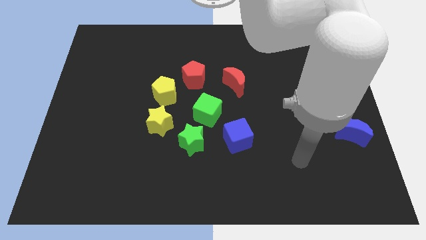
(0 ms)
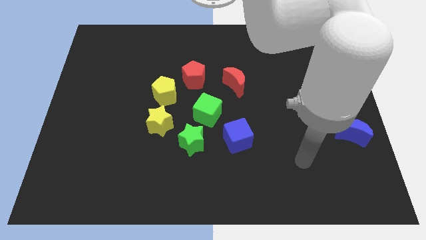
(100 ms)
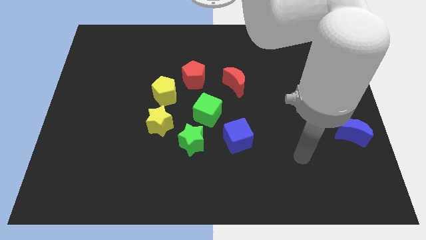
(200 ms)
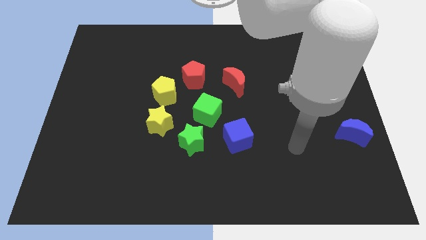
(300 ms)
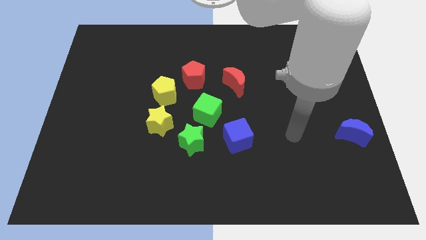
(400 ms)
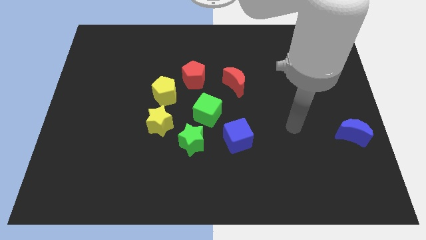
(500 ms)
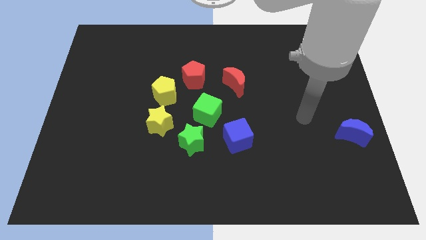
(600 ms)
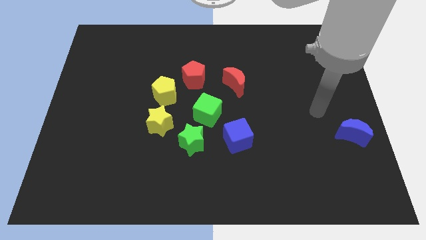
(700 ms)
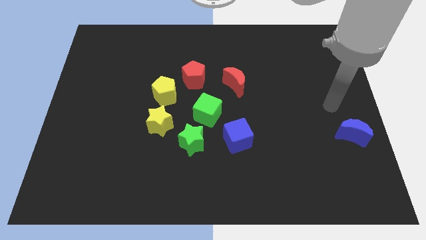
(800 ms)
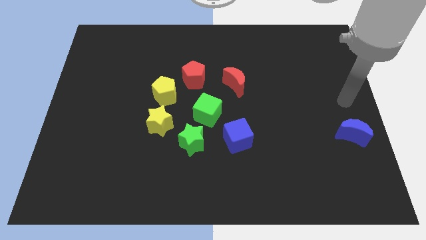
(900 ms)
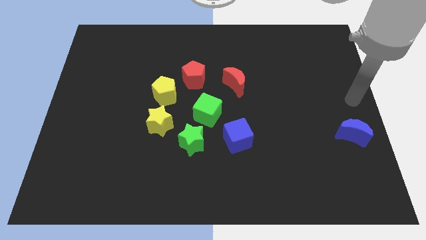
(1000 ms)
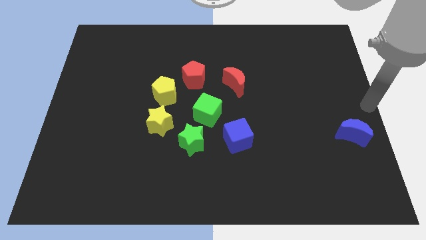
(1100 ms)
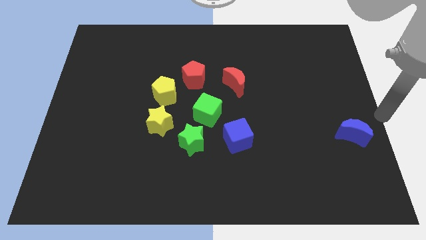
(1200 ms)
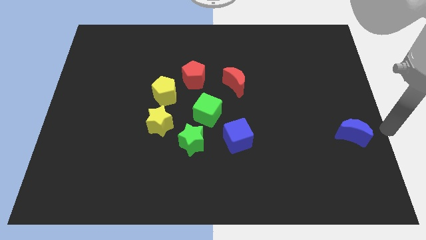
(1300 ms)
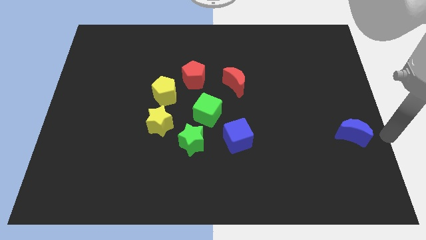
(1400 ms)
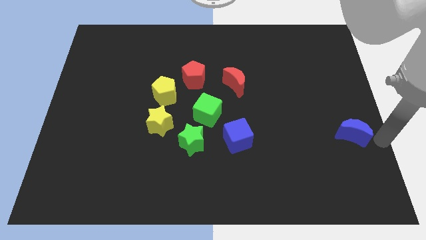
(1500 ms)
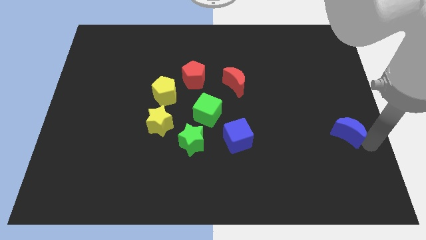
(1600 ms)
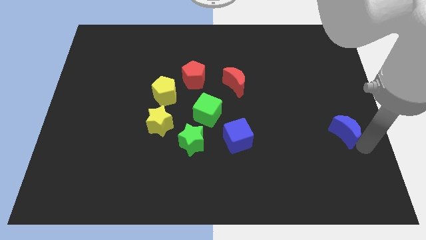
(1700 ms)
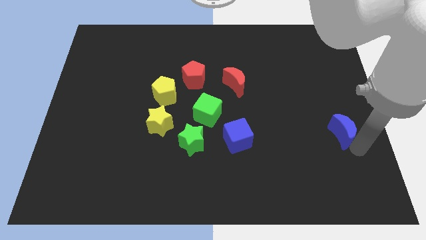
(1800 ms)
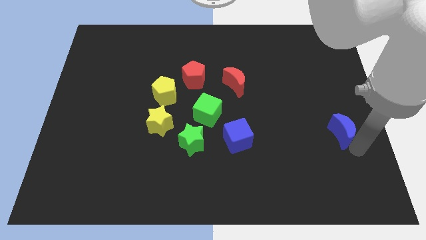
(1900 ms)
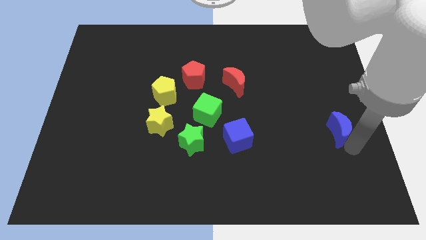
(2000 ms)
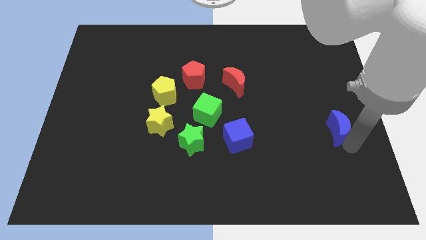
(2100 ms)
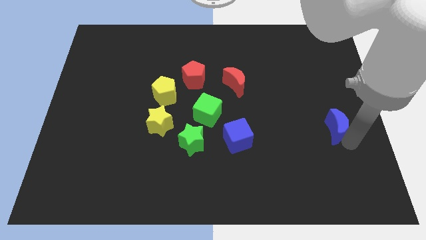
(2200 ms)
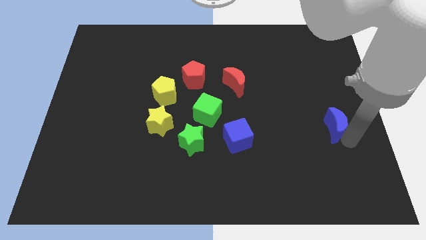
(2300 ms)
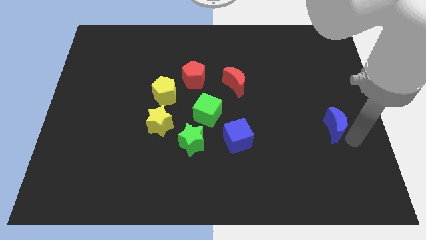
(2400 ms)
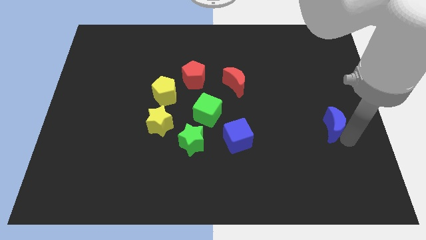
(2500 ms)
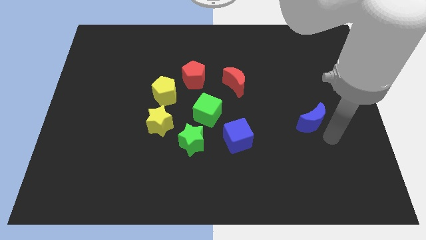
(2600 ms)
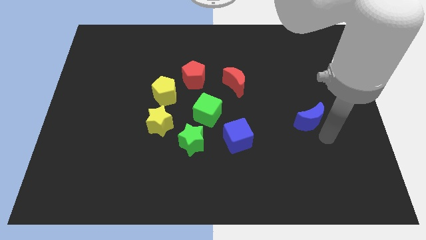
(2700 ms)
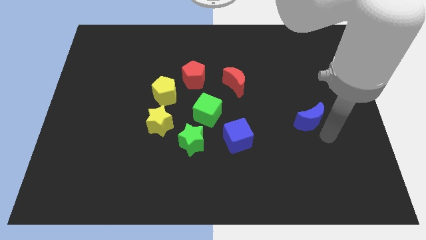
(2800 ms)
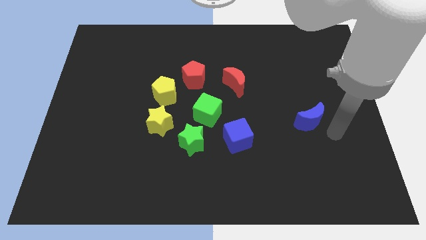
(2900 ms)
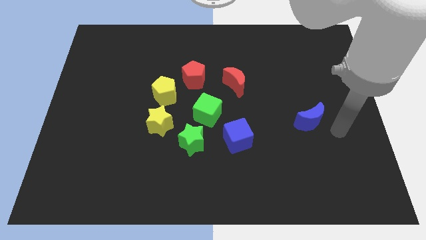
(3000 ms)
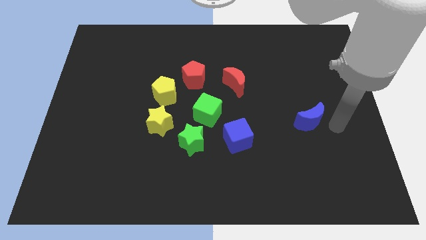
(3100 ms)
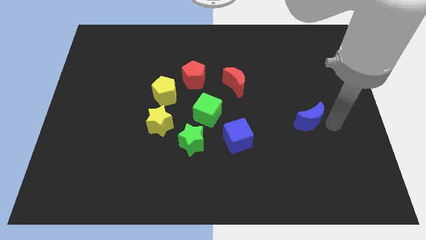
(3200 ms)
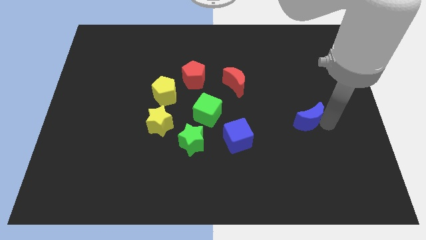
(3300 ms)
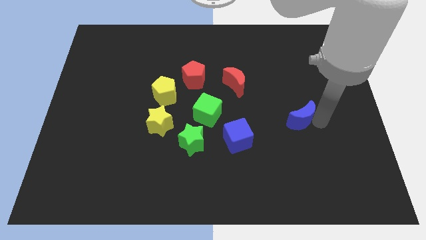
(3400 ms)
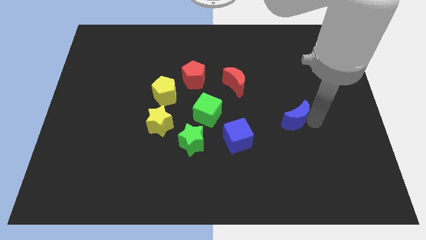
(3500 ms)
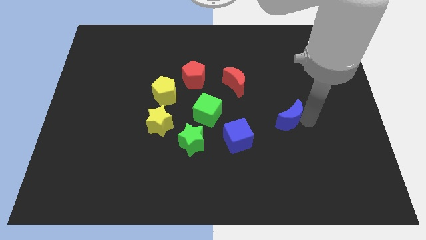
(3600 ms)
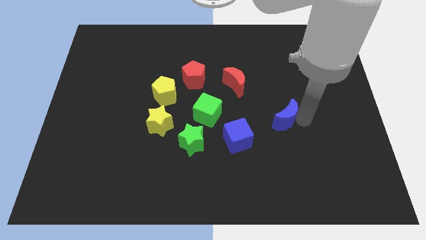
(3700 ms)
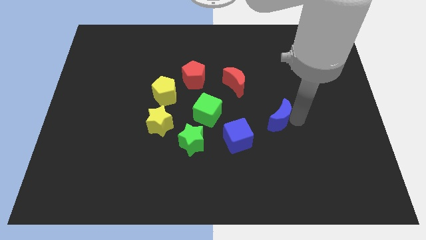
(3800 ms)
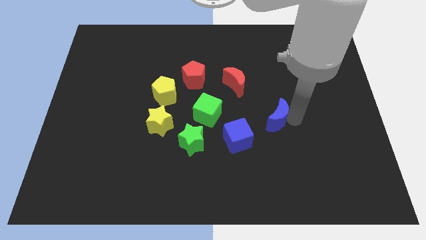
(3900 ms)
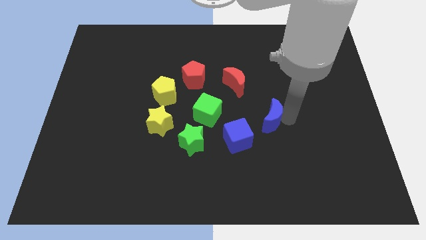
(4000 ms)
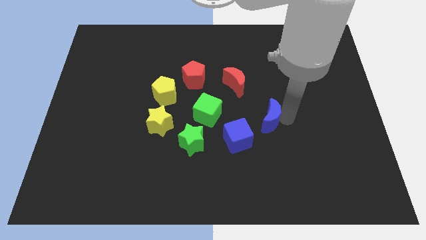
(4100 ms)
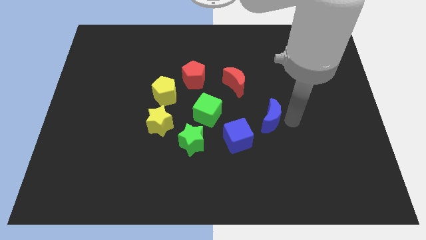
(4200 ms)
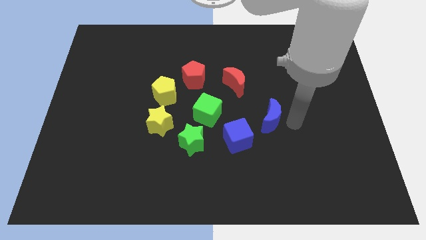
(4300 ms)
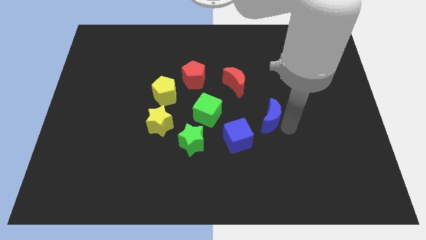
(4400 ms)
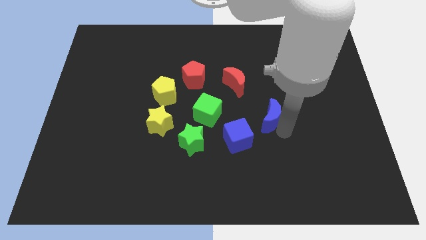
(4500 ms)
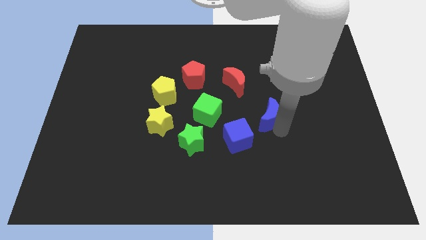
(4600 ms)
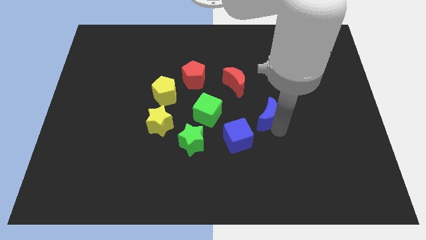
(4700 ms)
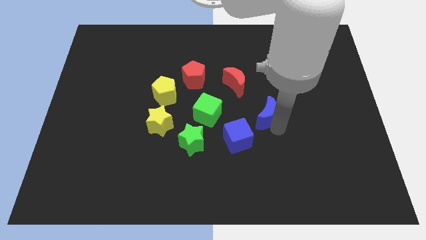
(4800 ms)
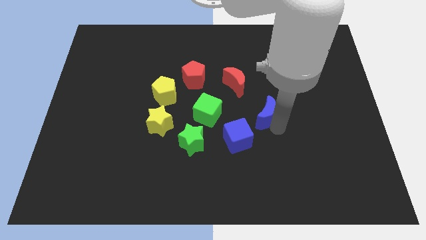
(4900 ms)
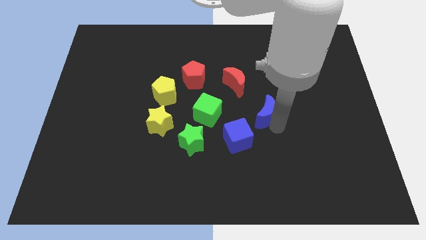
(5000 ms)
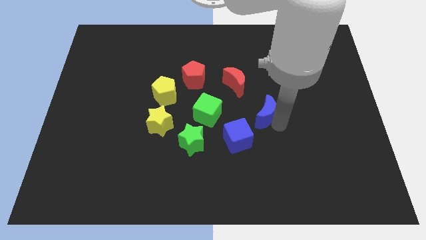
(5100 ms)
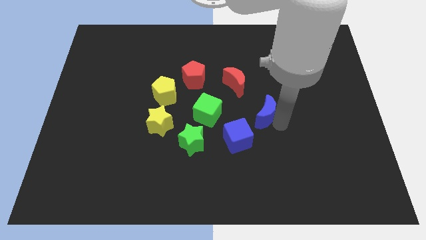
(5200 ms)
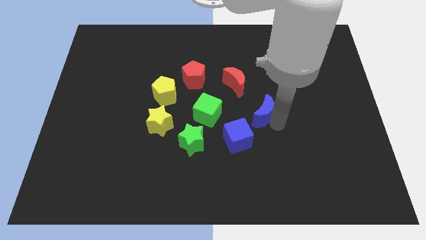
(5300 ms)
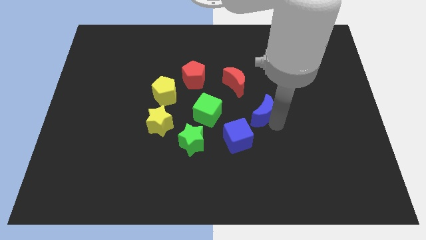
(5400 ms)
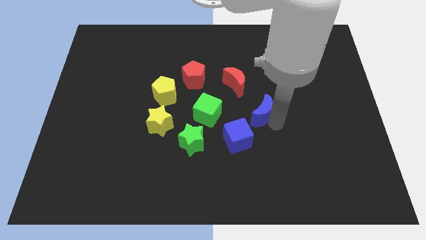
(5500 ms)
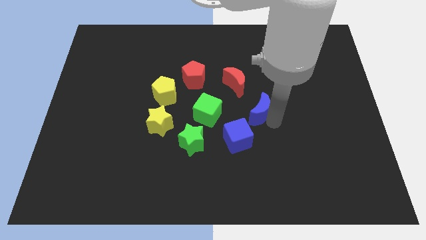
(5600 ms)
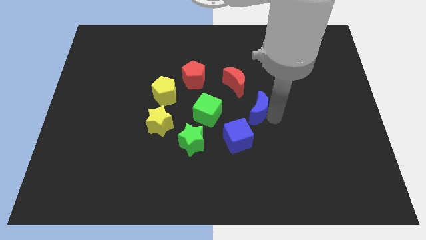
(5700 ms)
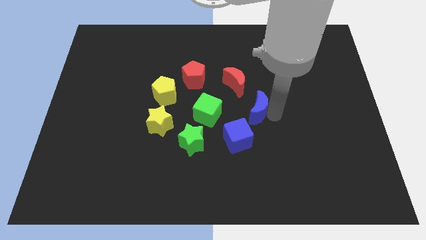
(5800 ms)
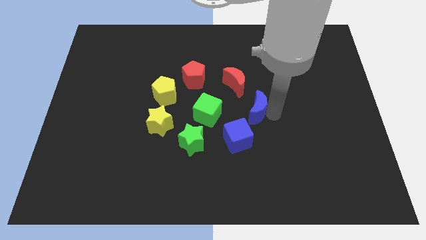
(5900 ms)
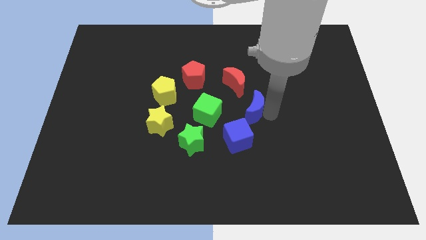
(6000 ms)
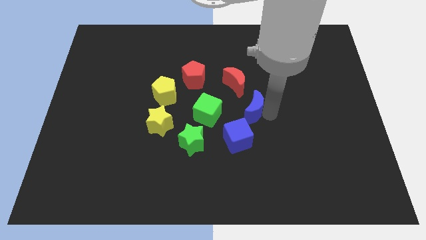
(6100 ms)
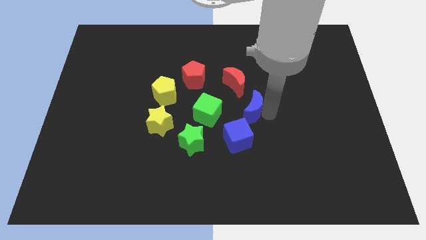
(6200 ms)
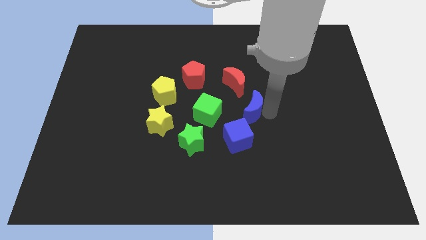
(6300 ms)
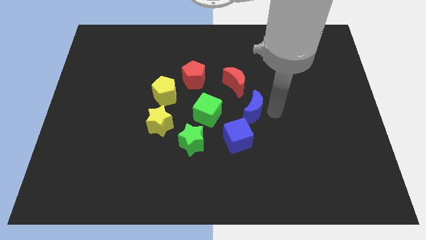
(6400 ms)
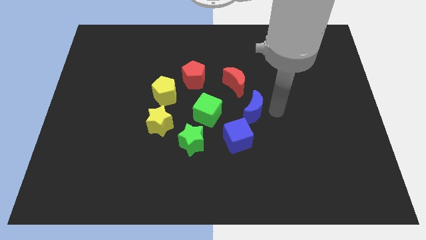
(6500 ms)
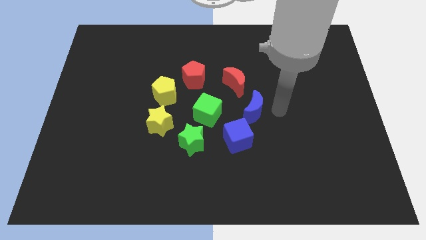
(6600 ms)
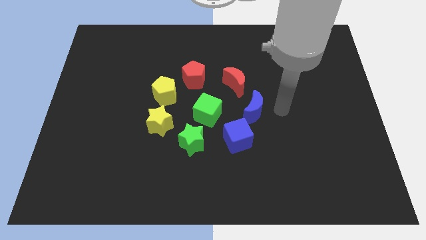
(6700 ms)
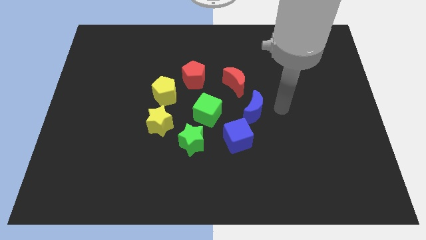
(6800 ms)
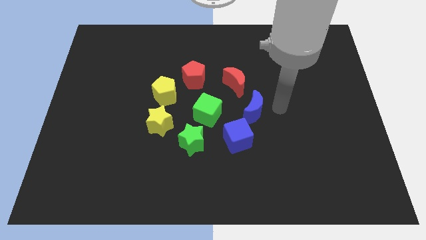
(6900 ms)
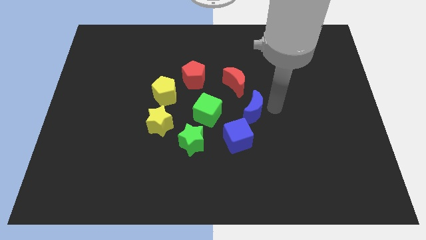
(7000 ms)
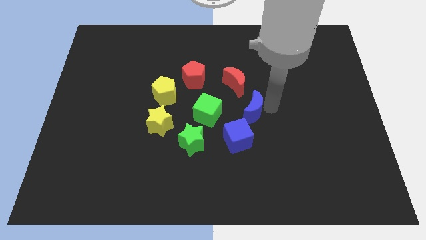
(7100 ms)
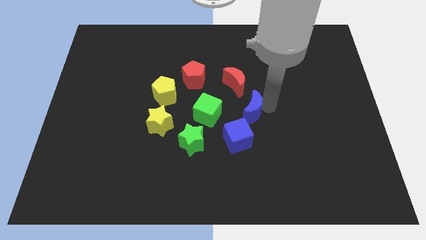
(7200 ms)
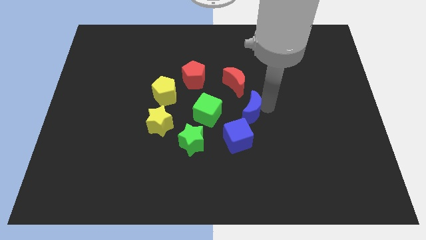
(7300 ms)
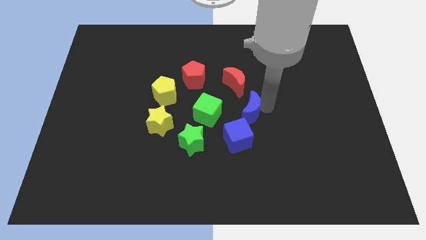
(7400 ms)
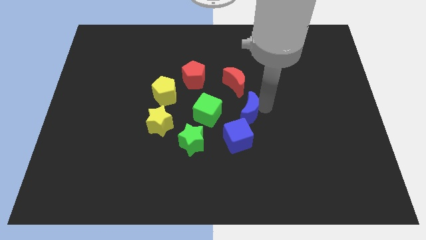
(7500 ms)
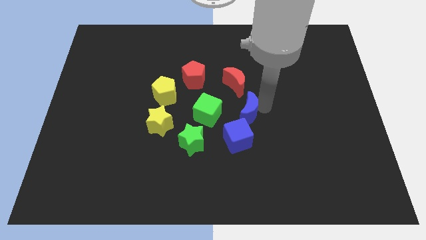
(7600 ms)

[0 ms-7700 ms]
place blue moon into the group of blocks

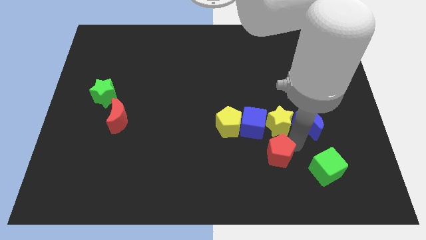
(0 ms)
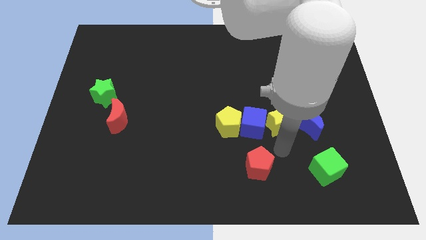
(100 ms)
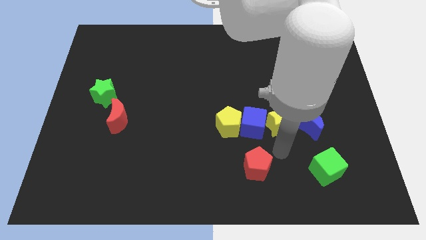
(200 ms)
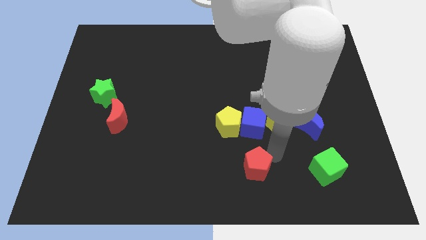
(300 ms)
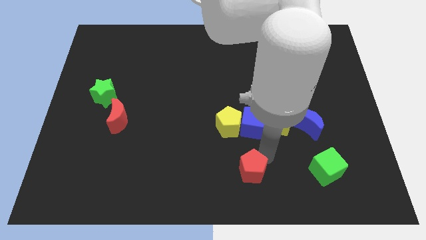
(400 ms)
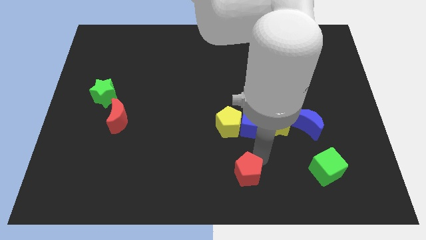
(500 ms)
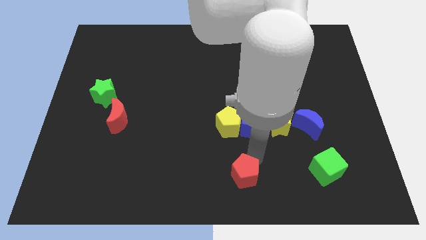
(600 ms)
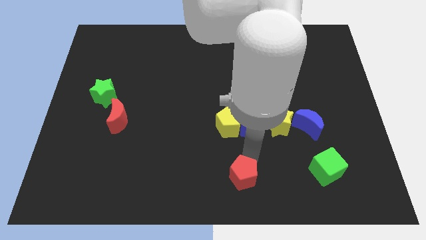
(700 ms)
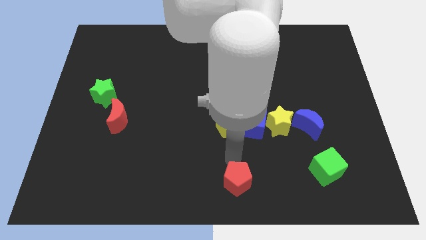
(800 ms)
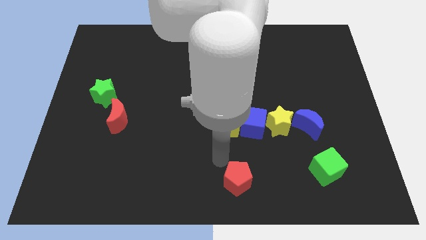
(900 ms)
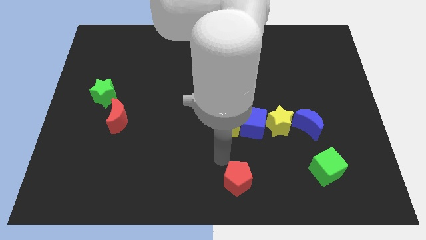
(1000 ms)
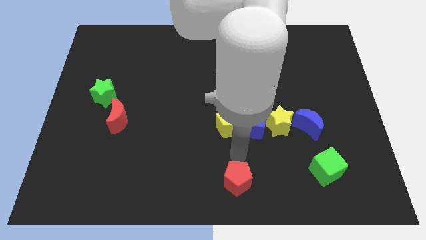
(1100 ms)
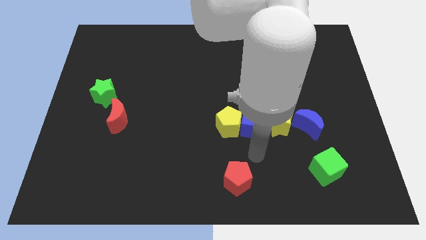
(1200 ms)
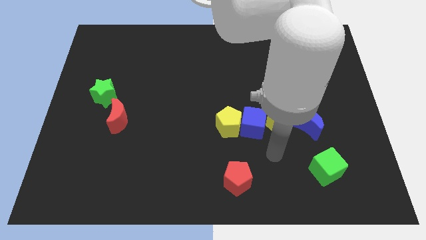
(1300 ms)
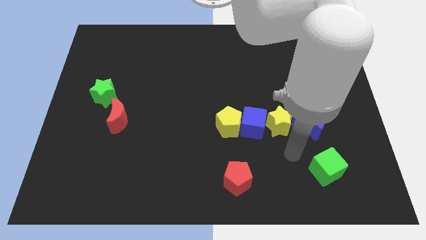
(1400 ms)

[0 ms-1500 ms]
slide the red pentagon to the left
